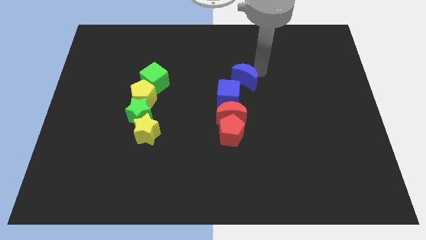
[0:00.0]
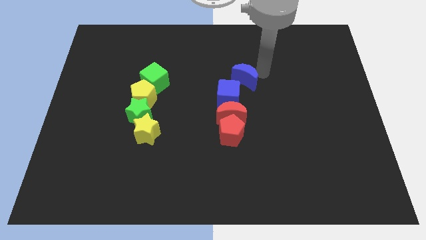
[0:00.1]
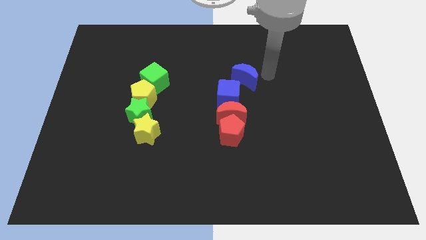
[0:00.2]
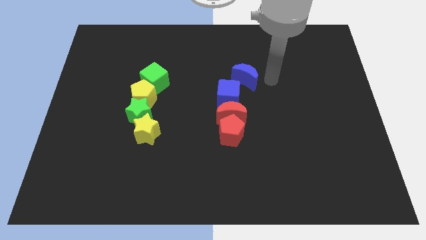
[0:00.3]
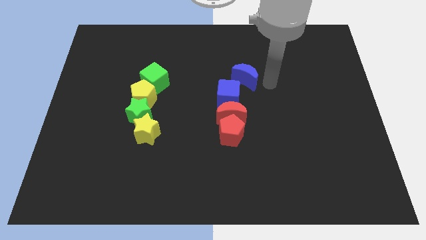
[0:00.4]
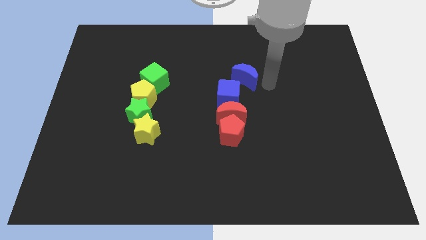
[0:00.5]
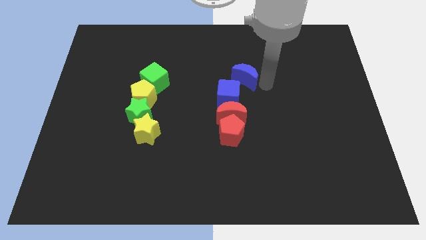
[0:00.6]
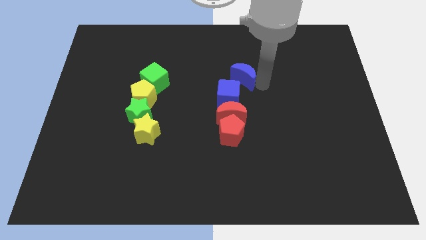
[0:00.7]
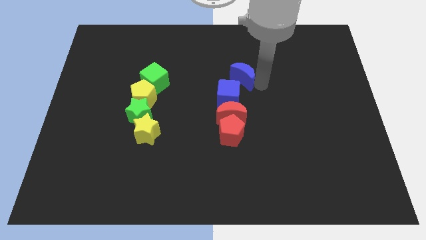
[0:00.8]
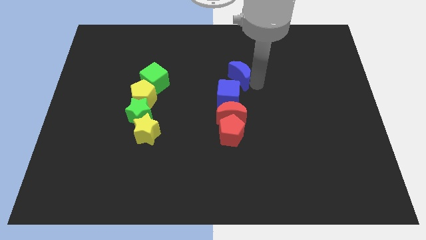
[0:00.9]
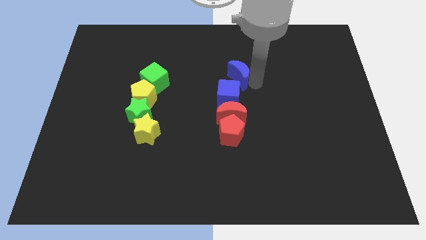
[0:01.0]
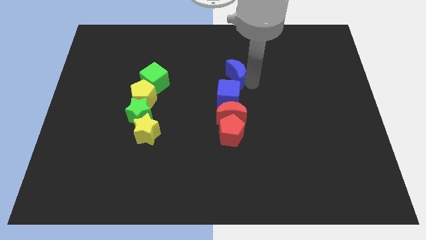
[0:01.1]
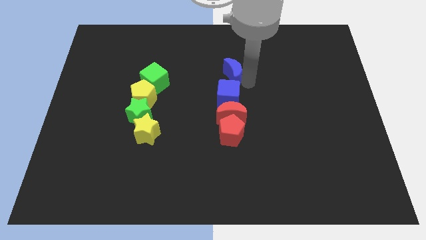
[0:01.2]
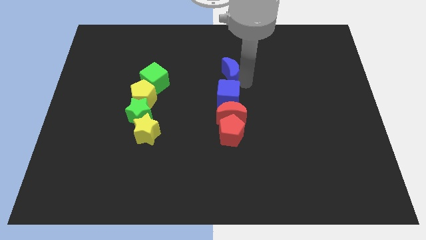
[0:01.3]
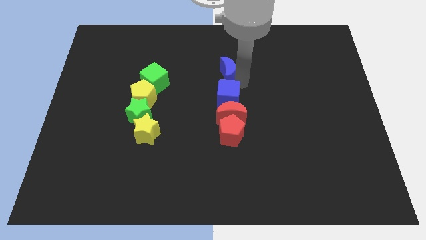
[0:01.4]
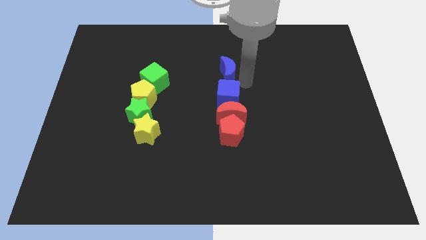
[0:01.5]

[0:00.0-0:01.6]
place the blue crescent above the blue cube

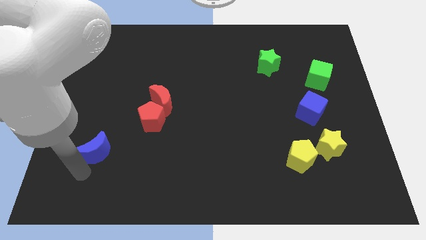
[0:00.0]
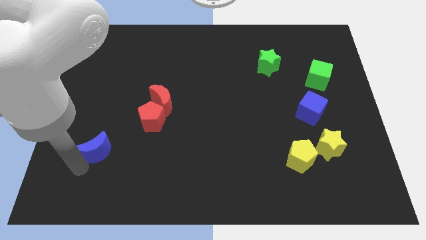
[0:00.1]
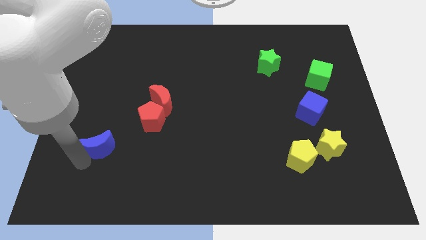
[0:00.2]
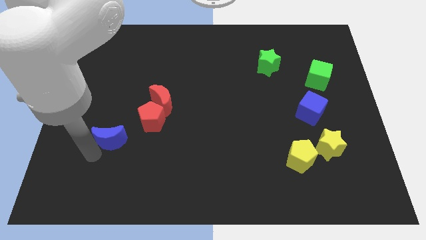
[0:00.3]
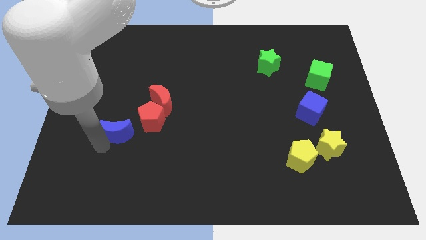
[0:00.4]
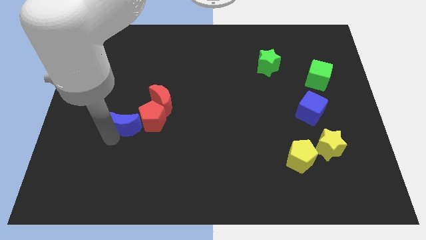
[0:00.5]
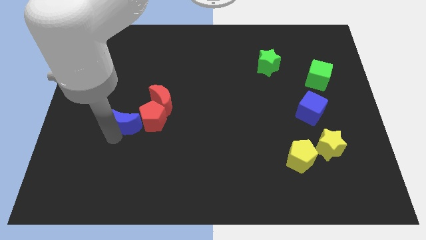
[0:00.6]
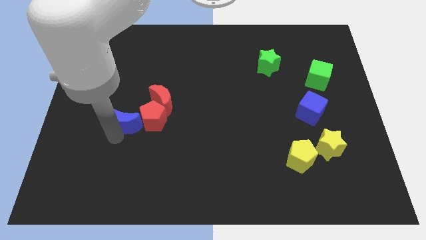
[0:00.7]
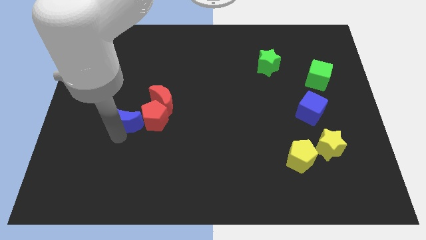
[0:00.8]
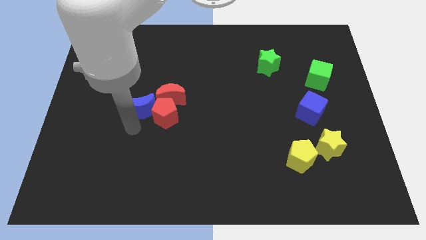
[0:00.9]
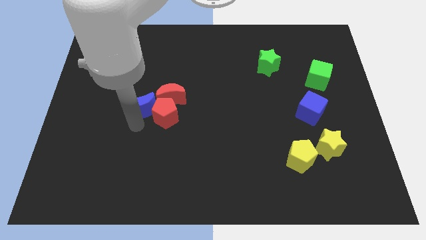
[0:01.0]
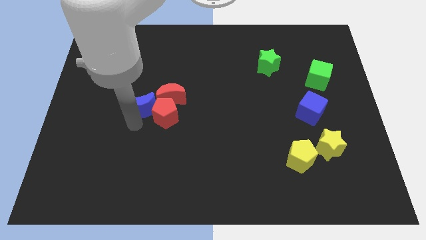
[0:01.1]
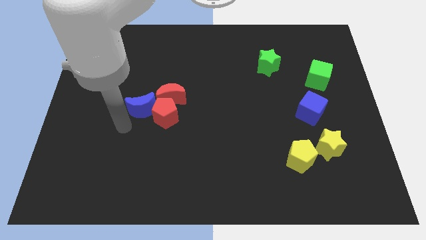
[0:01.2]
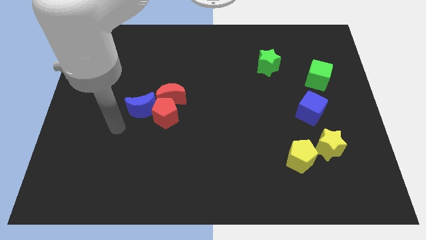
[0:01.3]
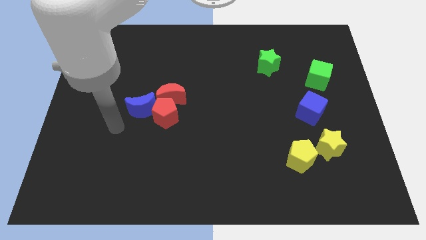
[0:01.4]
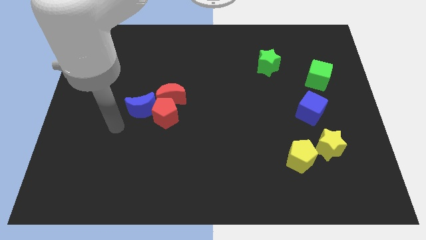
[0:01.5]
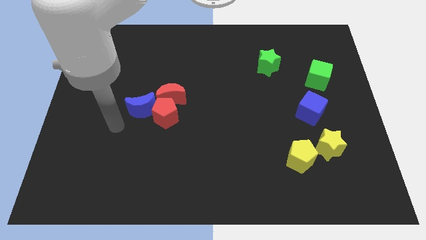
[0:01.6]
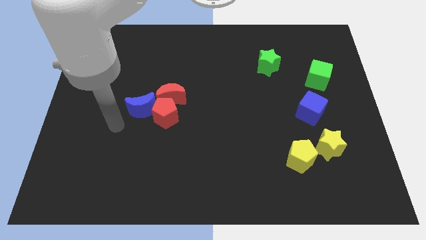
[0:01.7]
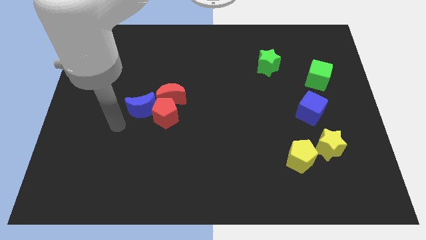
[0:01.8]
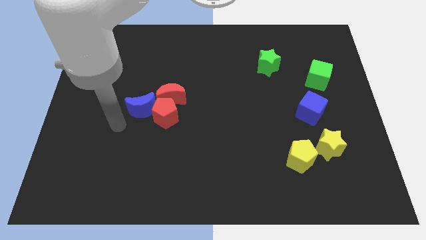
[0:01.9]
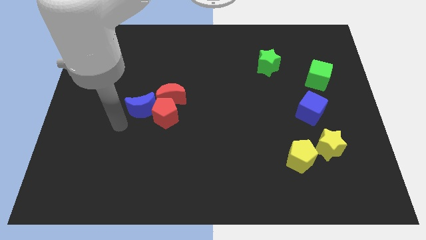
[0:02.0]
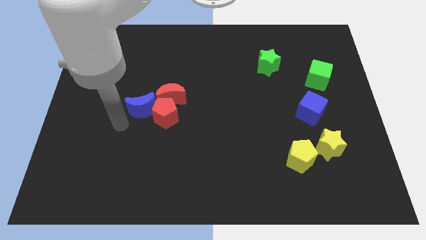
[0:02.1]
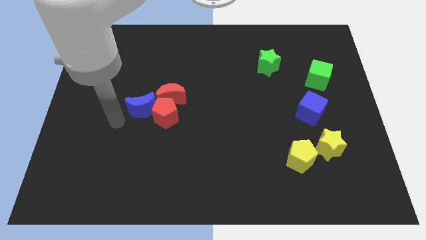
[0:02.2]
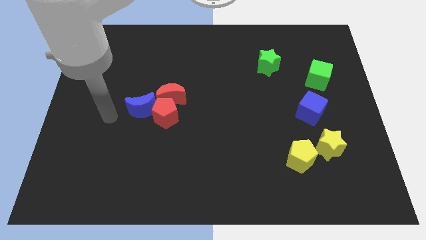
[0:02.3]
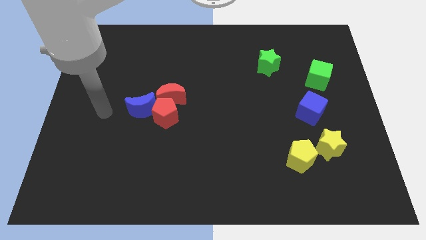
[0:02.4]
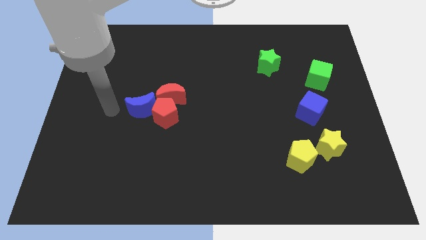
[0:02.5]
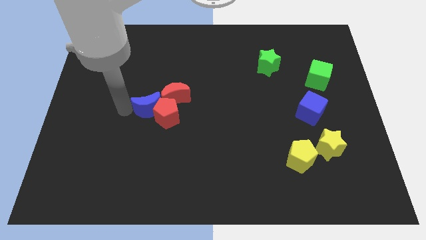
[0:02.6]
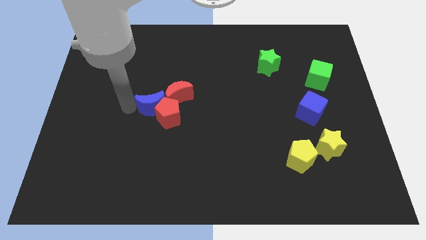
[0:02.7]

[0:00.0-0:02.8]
move the blue moon left beside the red moon

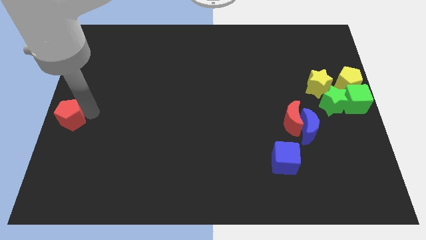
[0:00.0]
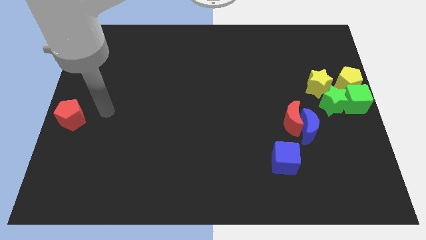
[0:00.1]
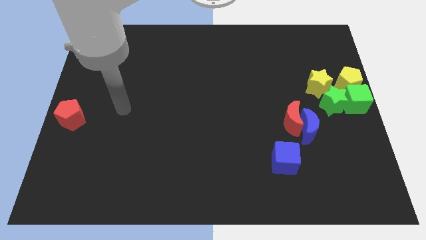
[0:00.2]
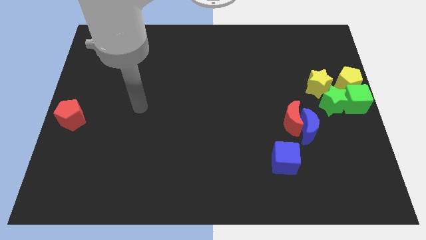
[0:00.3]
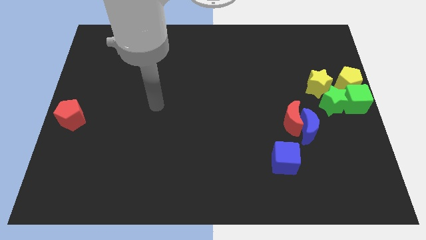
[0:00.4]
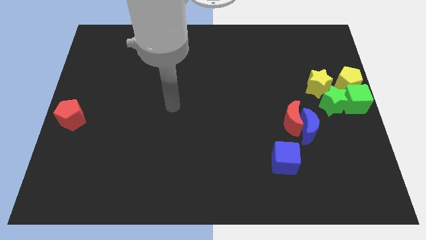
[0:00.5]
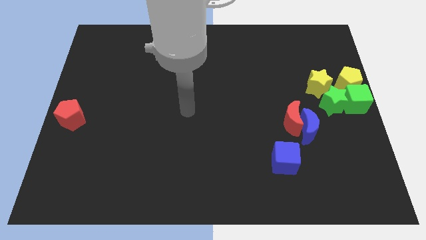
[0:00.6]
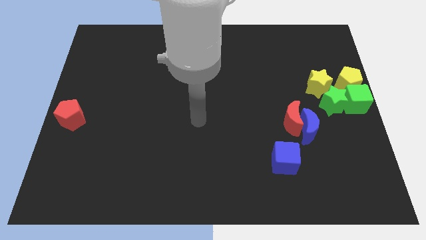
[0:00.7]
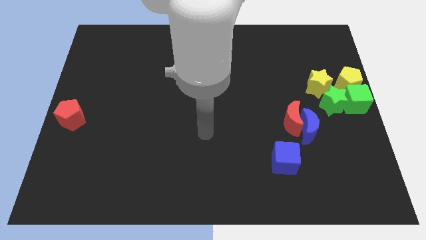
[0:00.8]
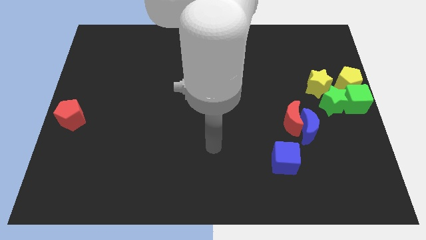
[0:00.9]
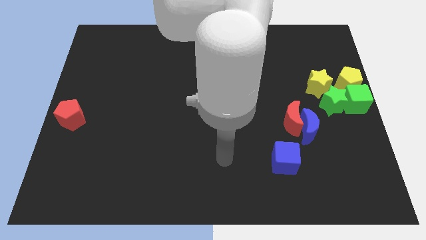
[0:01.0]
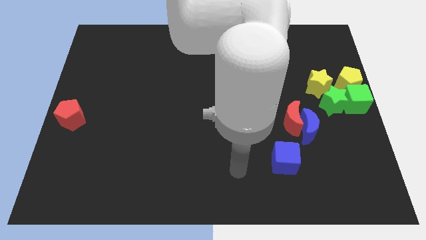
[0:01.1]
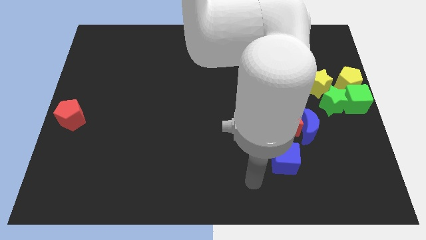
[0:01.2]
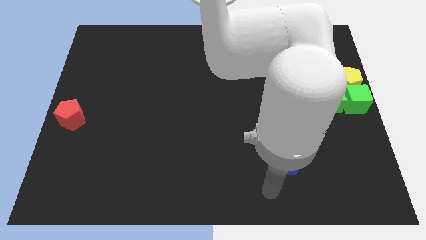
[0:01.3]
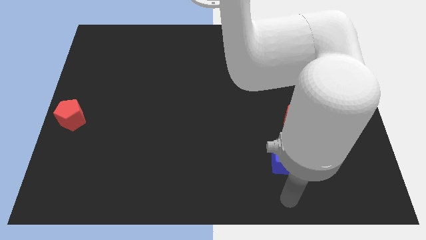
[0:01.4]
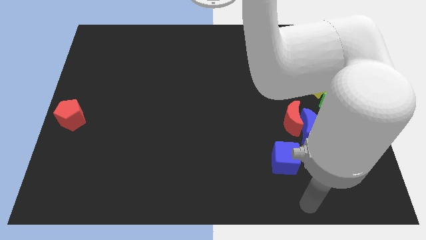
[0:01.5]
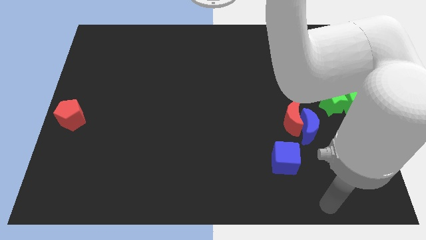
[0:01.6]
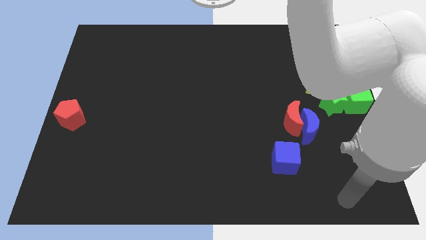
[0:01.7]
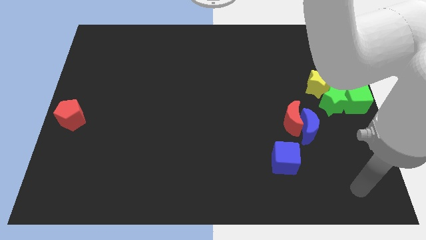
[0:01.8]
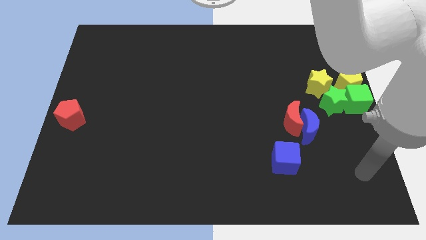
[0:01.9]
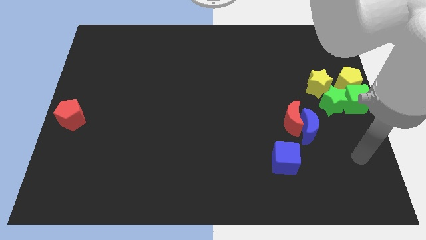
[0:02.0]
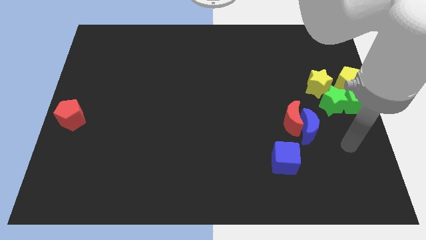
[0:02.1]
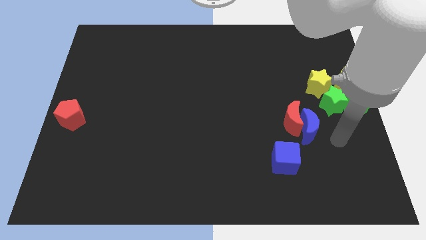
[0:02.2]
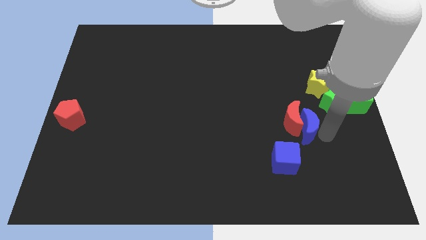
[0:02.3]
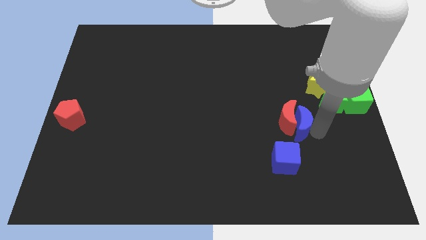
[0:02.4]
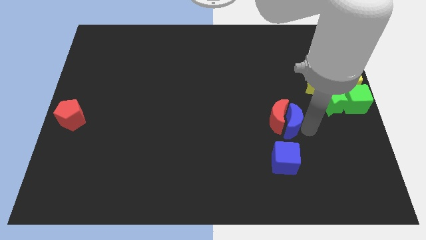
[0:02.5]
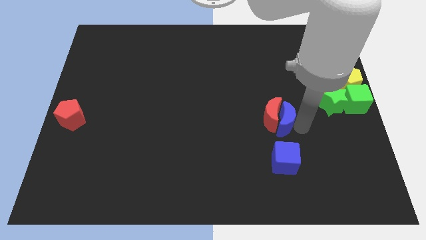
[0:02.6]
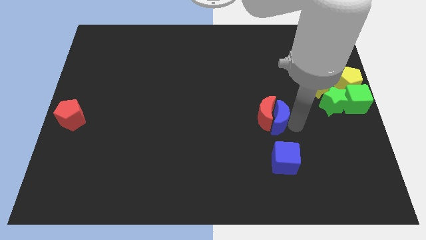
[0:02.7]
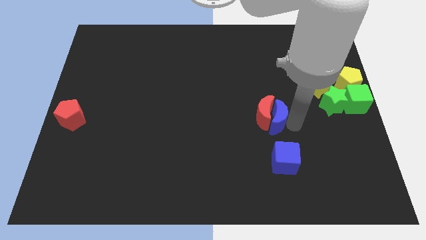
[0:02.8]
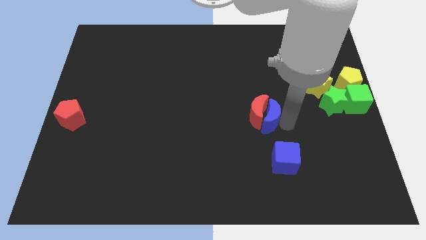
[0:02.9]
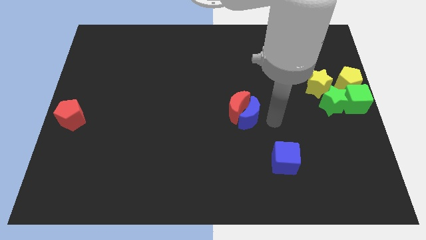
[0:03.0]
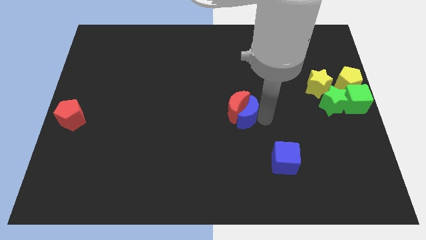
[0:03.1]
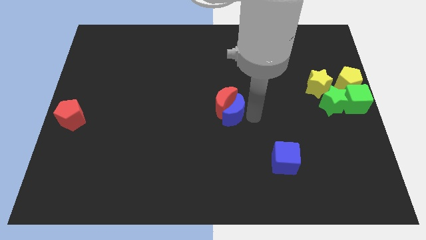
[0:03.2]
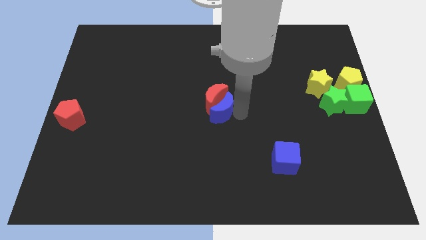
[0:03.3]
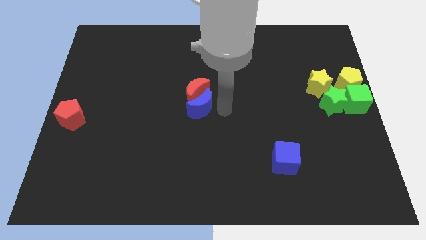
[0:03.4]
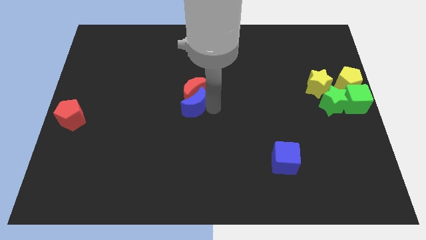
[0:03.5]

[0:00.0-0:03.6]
place the moons at the center of the board

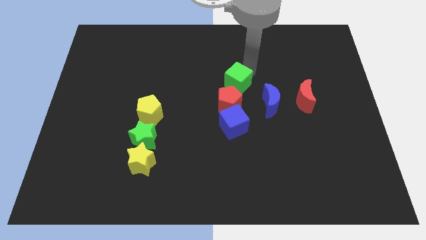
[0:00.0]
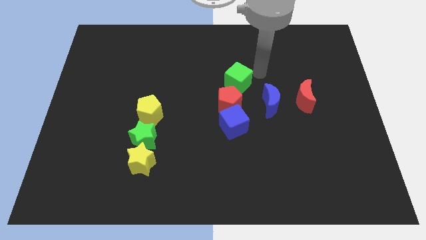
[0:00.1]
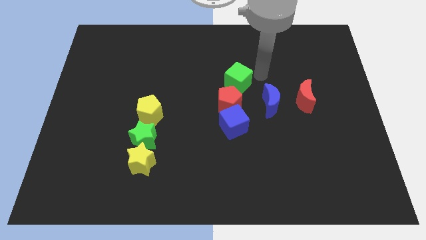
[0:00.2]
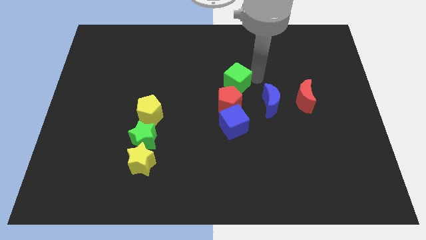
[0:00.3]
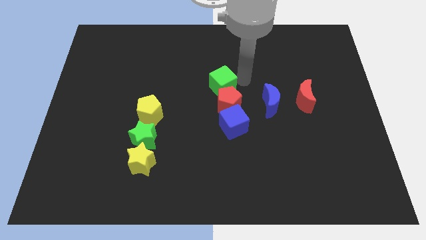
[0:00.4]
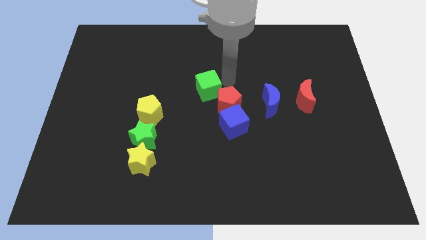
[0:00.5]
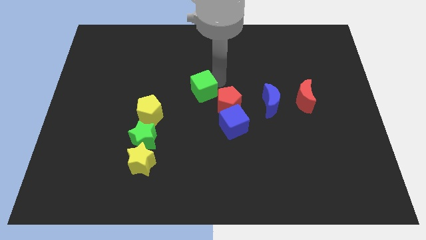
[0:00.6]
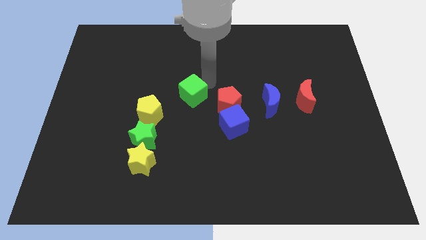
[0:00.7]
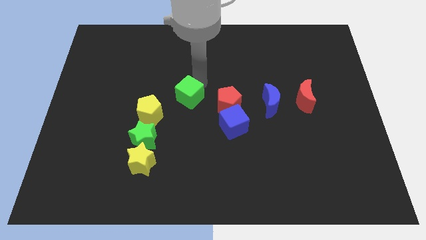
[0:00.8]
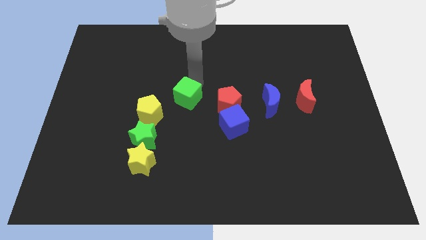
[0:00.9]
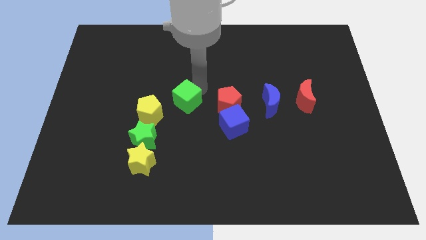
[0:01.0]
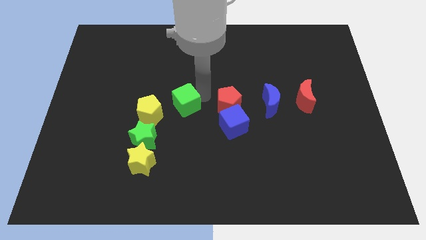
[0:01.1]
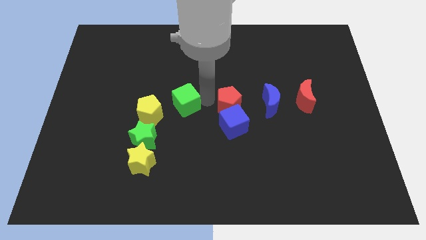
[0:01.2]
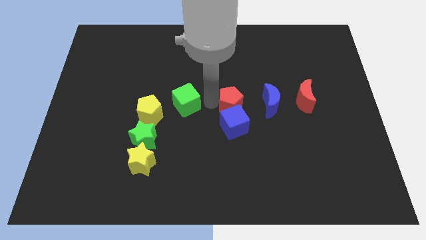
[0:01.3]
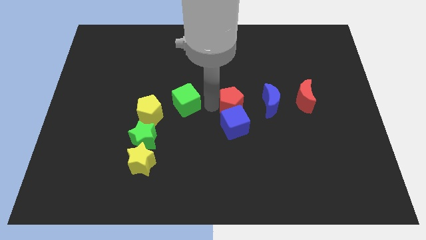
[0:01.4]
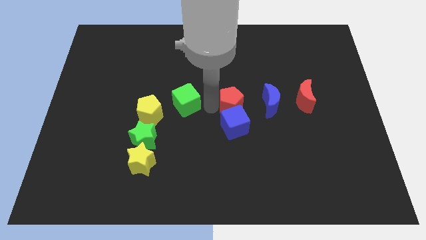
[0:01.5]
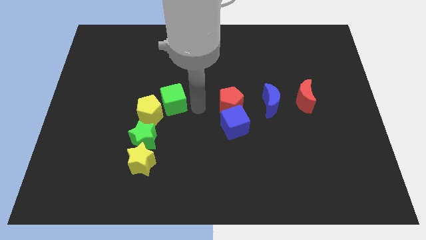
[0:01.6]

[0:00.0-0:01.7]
put the green cube parallel left to the red pentagon
